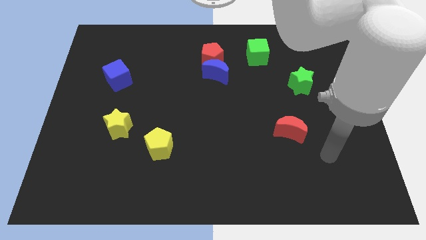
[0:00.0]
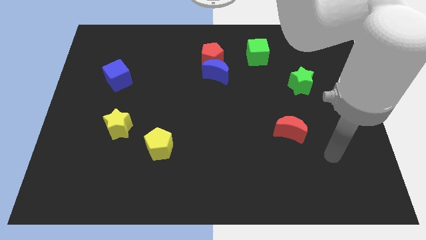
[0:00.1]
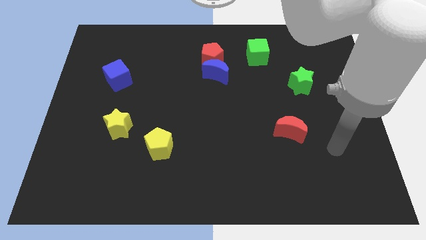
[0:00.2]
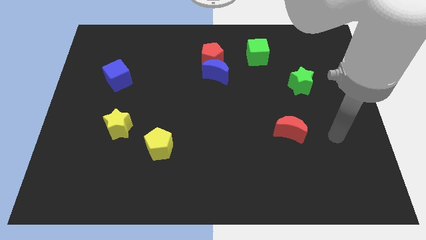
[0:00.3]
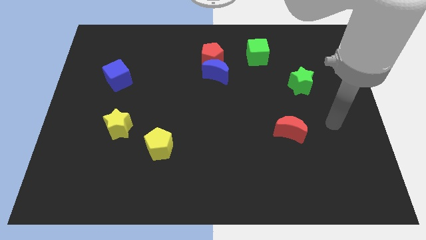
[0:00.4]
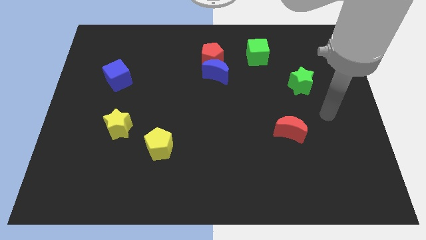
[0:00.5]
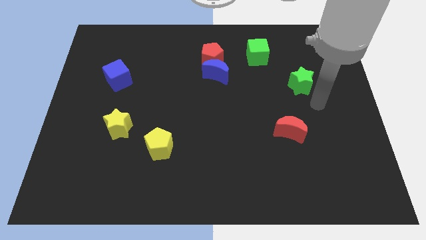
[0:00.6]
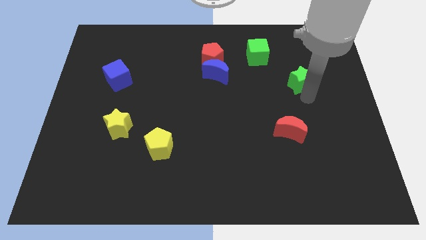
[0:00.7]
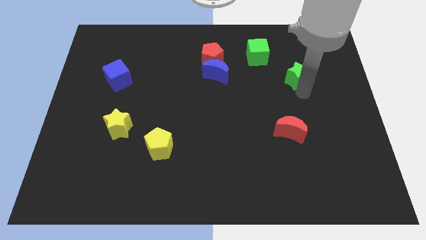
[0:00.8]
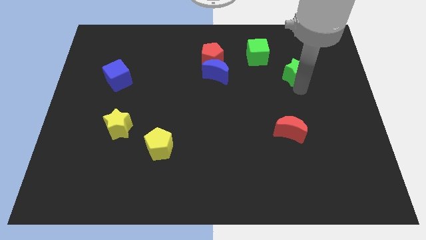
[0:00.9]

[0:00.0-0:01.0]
touch the bottom of green star

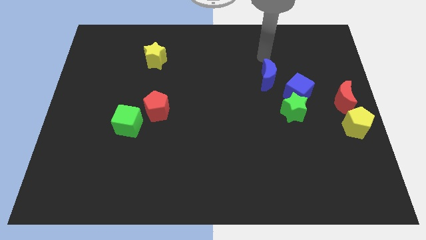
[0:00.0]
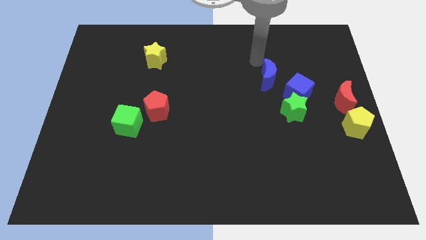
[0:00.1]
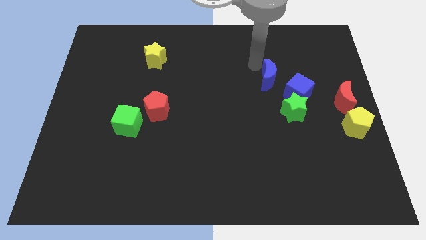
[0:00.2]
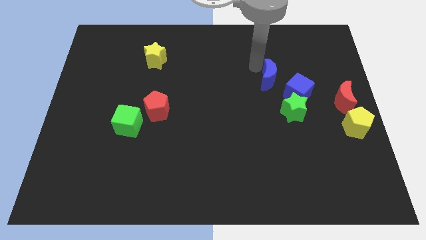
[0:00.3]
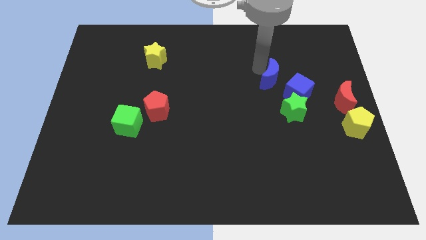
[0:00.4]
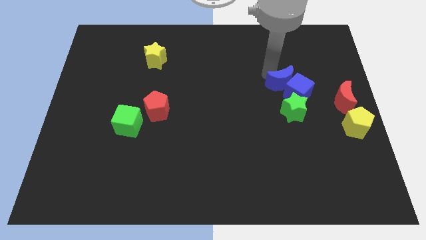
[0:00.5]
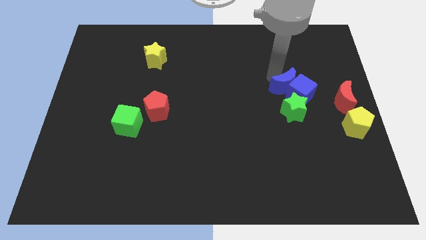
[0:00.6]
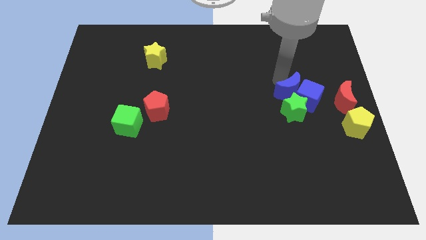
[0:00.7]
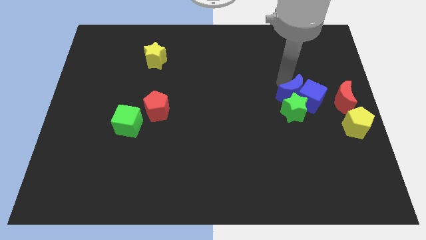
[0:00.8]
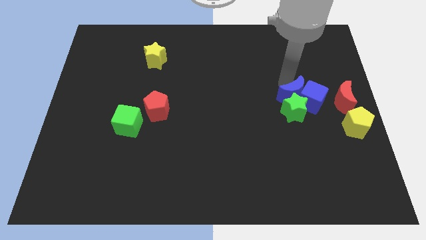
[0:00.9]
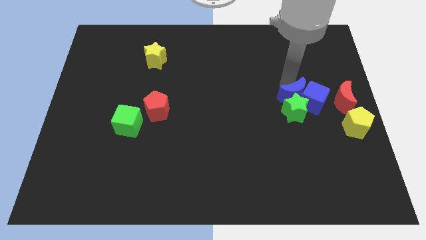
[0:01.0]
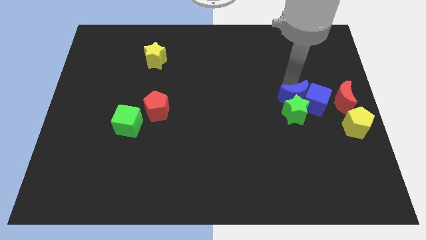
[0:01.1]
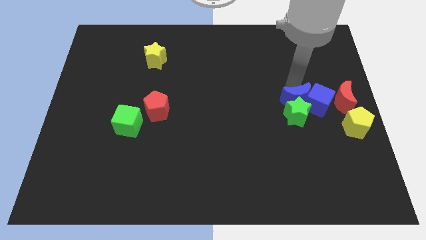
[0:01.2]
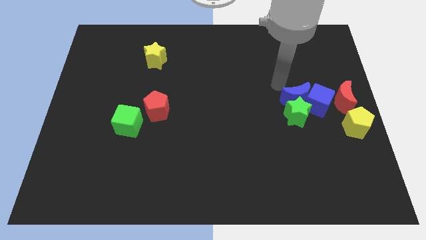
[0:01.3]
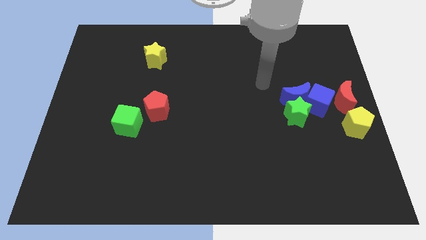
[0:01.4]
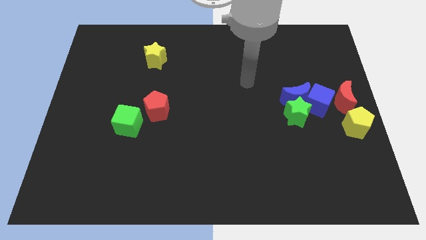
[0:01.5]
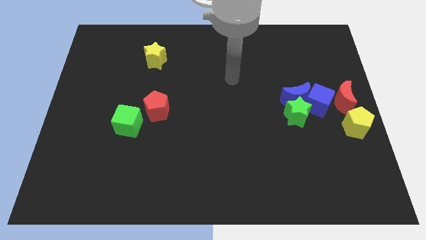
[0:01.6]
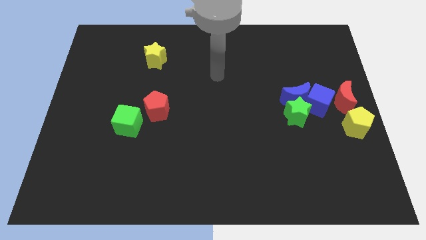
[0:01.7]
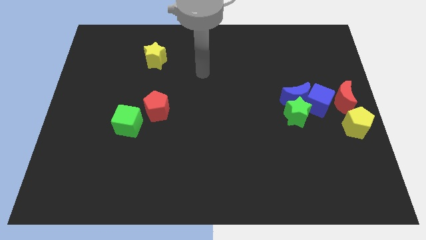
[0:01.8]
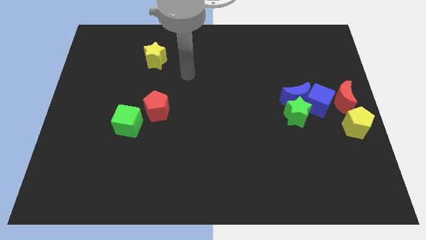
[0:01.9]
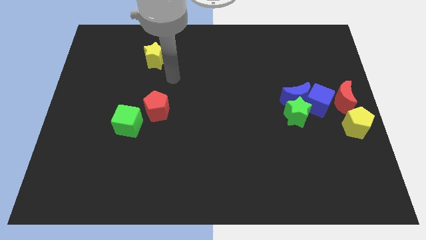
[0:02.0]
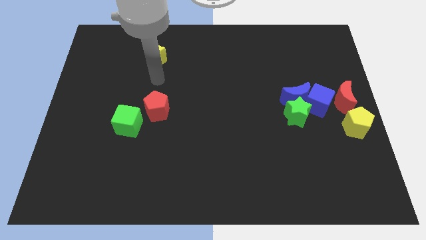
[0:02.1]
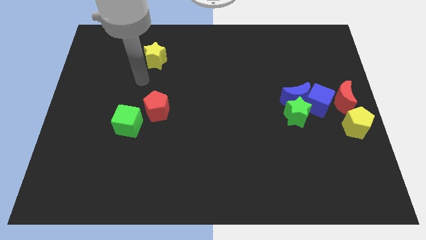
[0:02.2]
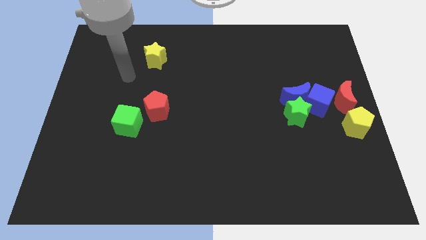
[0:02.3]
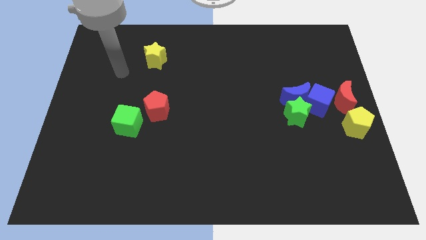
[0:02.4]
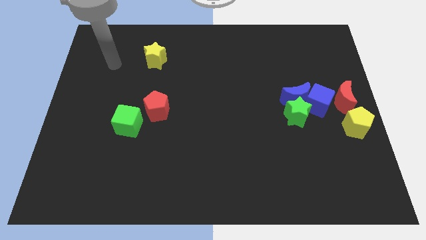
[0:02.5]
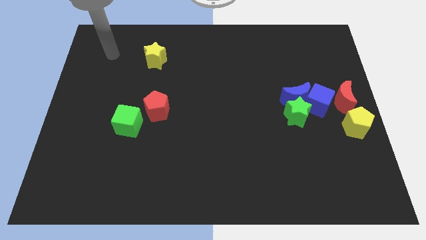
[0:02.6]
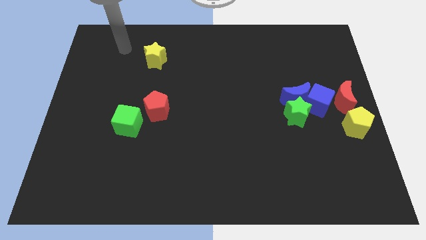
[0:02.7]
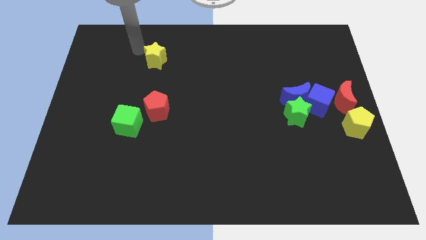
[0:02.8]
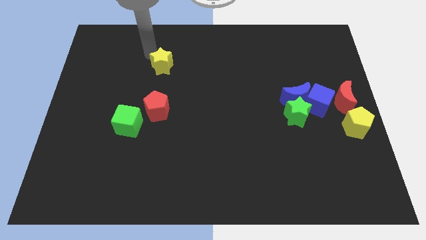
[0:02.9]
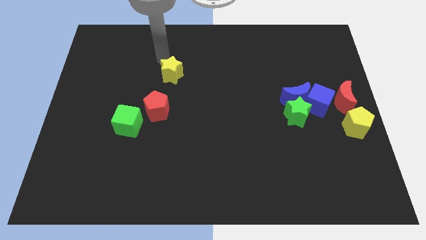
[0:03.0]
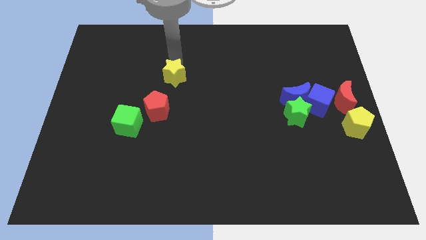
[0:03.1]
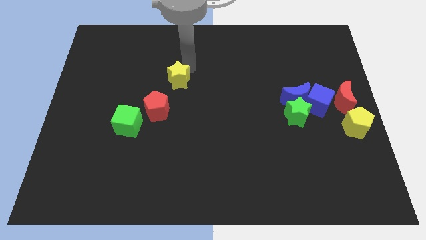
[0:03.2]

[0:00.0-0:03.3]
move your arm close to the yellow star

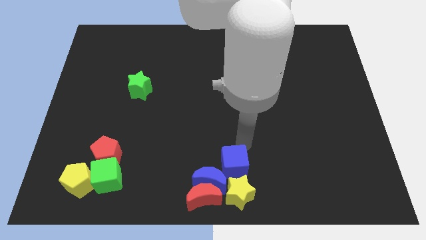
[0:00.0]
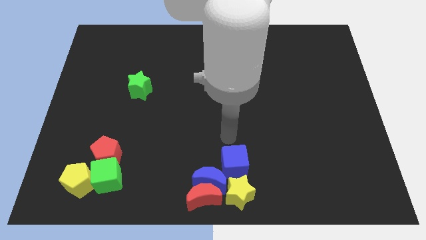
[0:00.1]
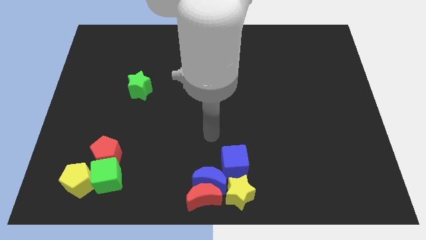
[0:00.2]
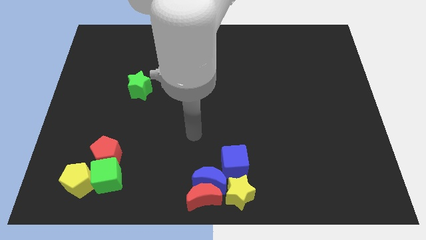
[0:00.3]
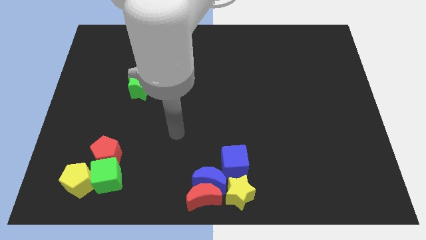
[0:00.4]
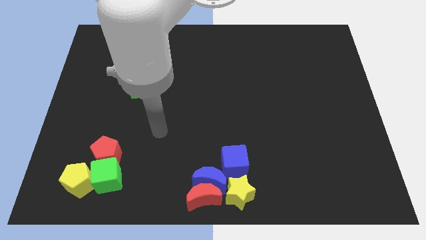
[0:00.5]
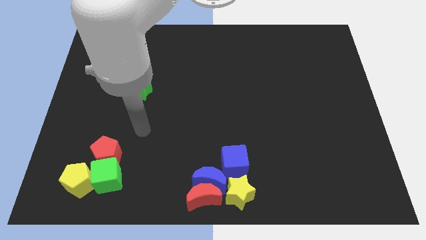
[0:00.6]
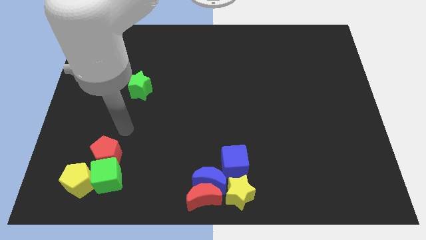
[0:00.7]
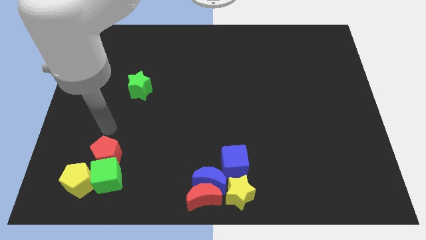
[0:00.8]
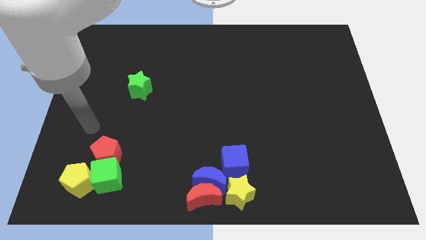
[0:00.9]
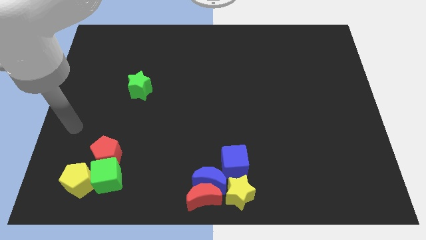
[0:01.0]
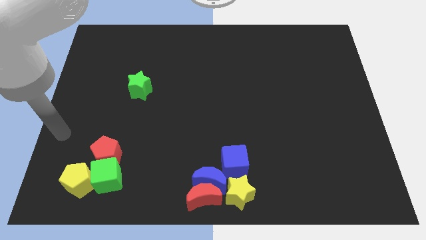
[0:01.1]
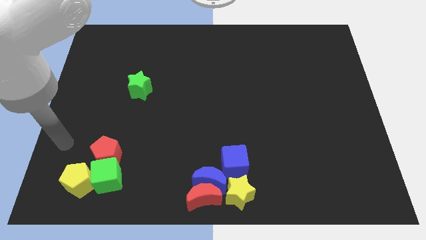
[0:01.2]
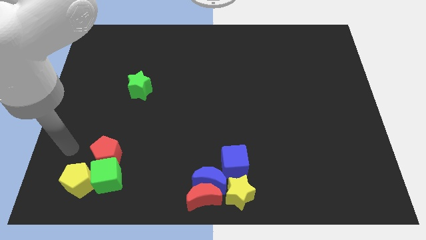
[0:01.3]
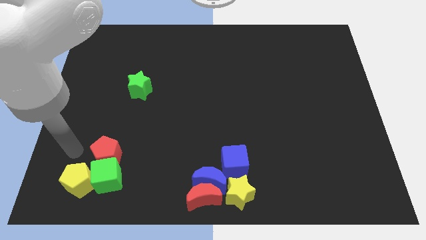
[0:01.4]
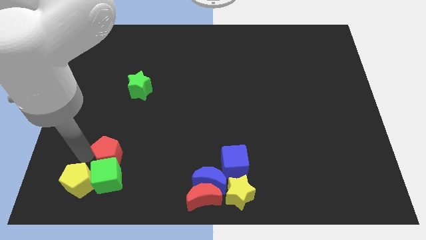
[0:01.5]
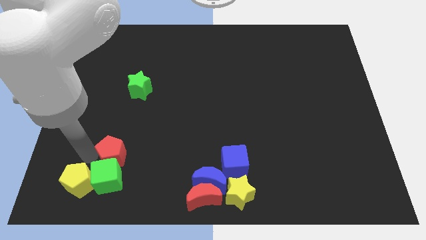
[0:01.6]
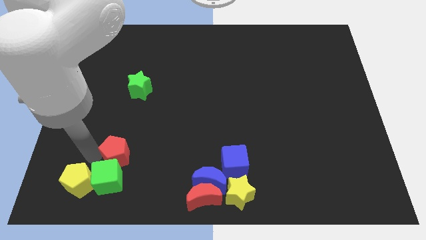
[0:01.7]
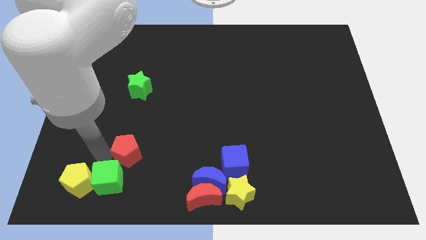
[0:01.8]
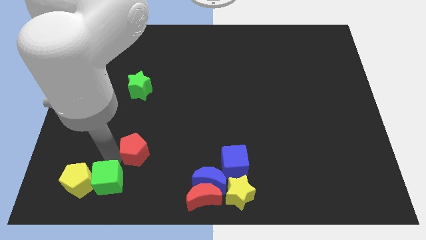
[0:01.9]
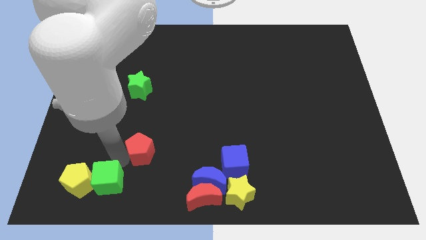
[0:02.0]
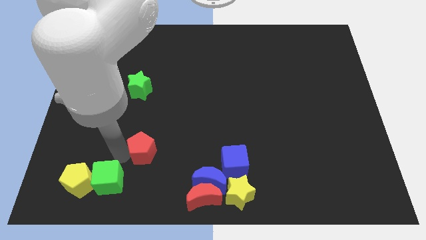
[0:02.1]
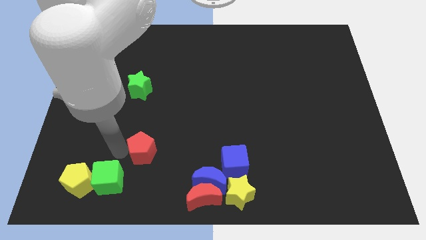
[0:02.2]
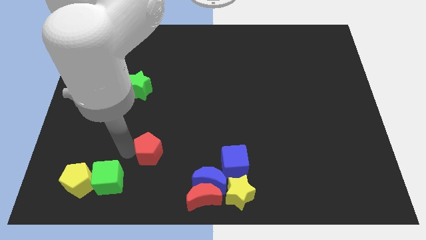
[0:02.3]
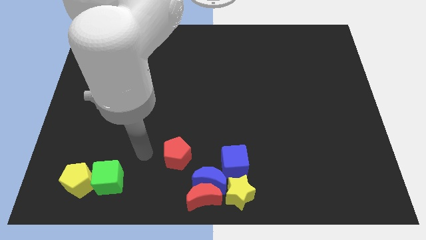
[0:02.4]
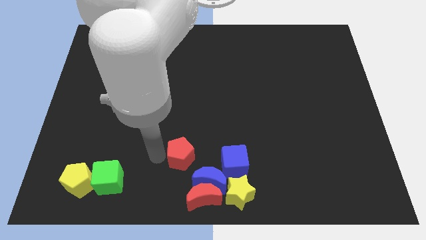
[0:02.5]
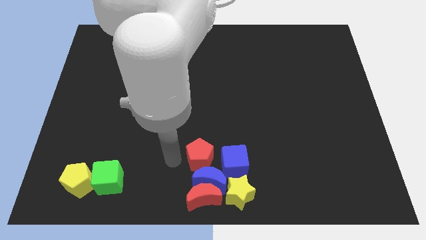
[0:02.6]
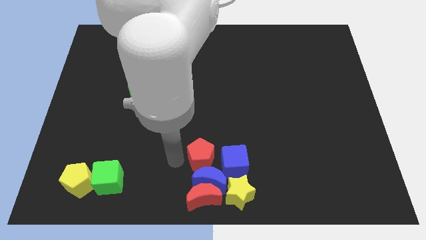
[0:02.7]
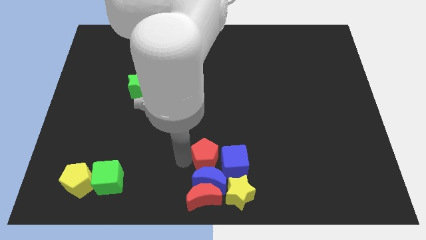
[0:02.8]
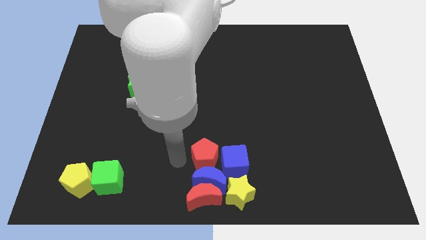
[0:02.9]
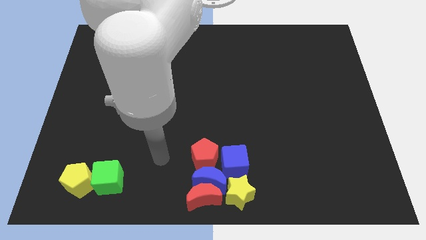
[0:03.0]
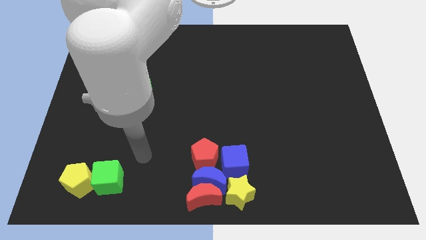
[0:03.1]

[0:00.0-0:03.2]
slide the red pentagon to the left of blue cube

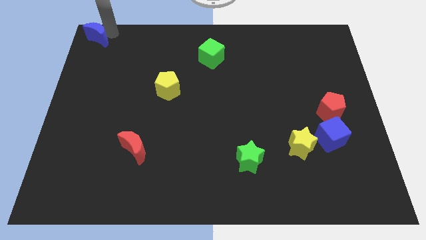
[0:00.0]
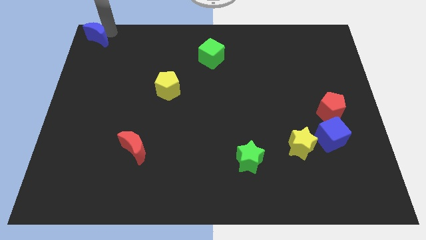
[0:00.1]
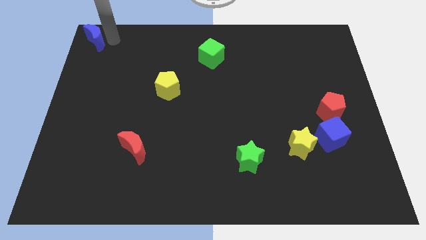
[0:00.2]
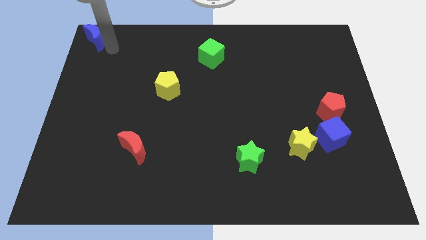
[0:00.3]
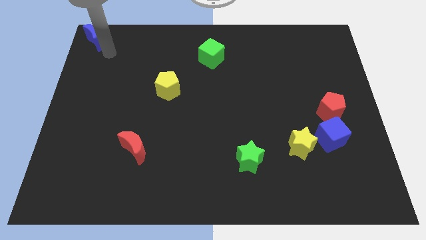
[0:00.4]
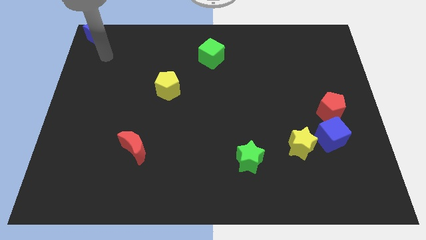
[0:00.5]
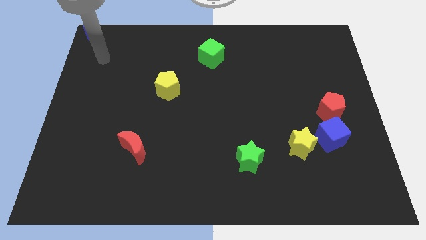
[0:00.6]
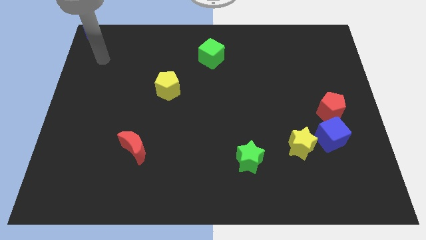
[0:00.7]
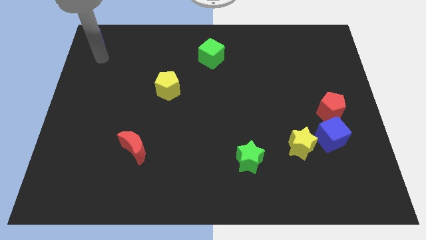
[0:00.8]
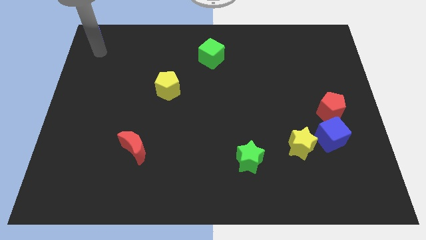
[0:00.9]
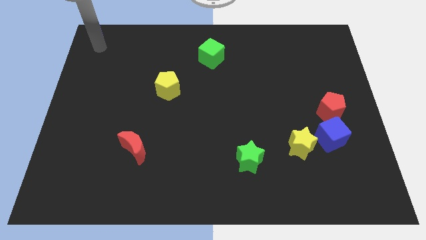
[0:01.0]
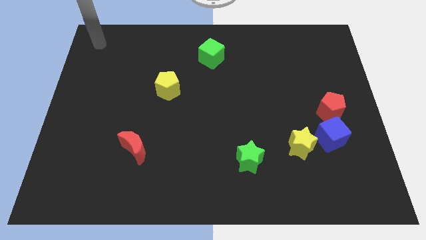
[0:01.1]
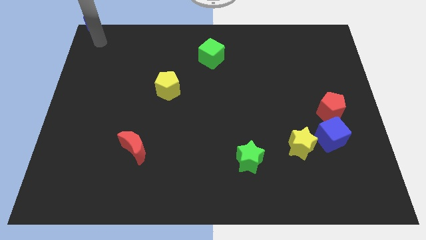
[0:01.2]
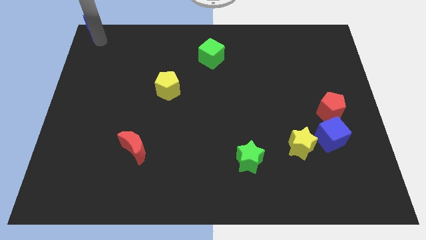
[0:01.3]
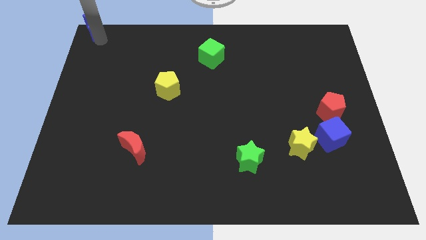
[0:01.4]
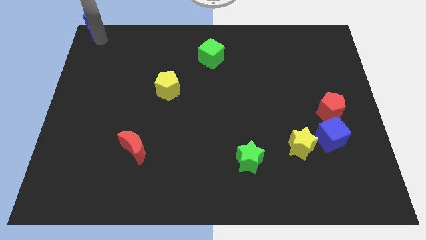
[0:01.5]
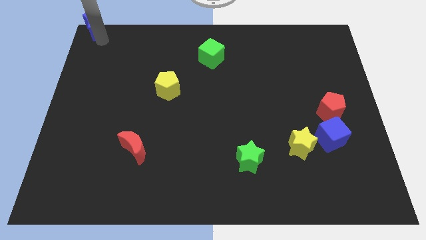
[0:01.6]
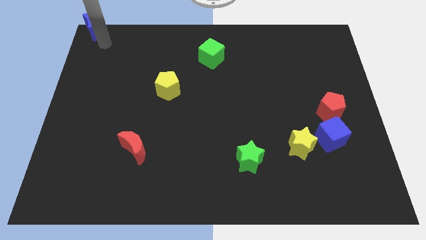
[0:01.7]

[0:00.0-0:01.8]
place the blue crescent at the top left side of the table
